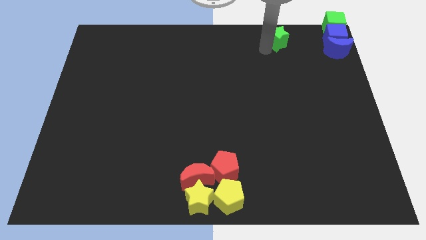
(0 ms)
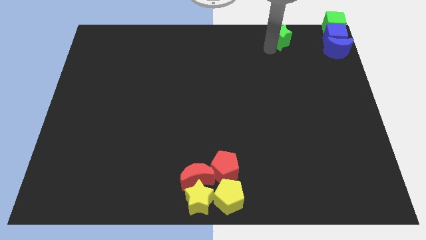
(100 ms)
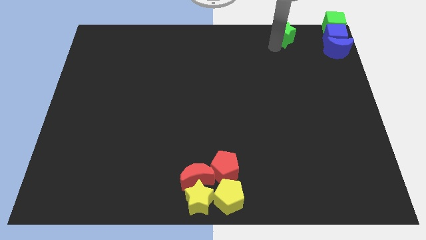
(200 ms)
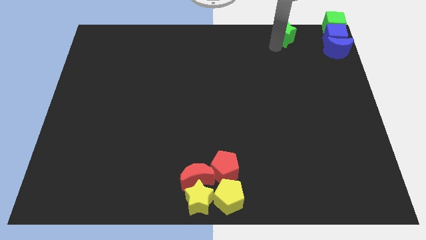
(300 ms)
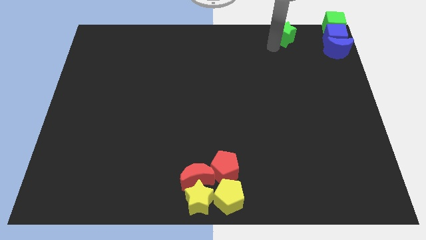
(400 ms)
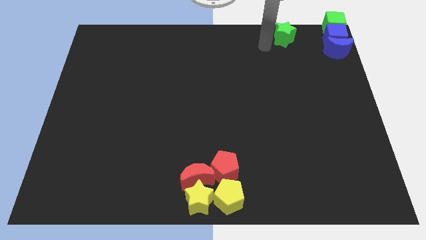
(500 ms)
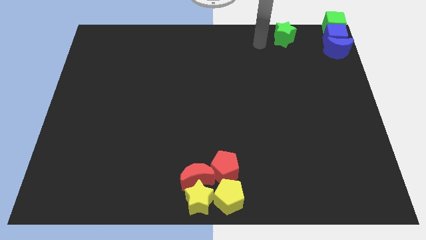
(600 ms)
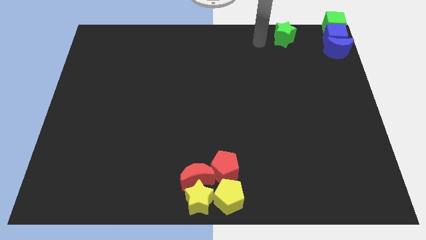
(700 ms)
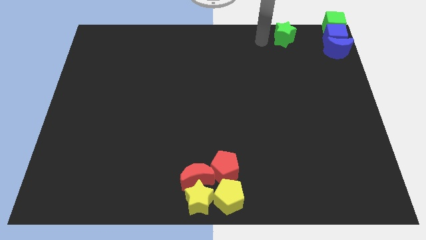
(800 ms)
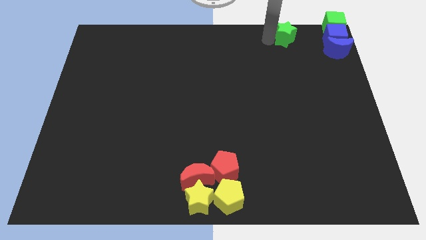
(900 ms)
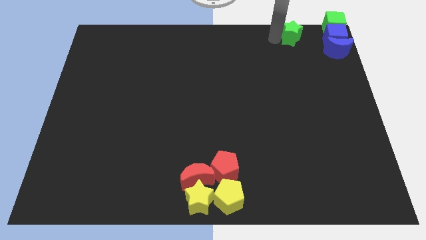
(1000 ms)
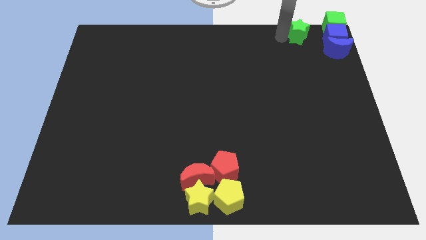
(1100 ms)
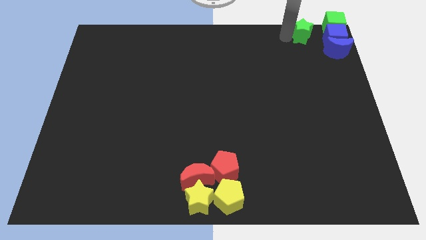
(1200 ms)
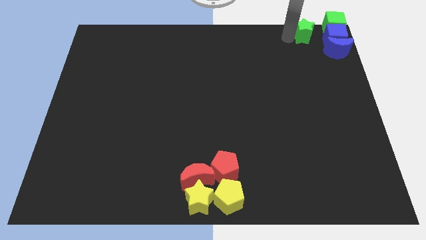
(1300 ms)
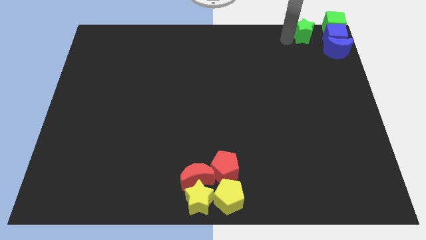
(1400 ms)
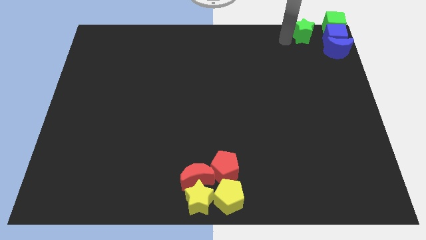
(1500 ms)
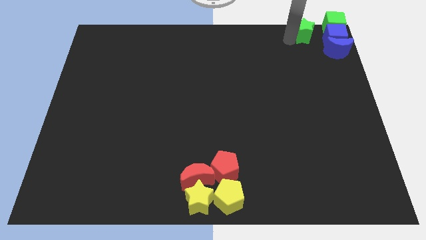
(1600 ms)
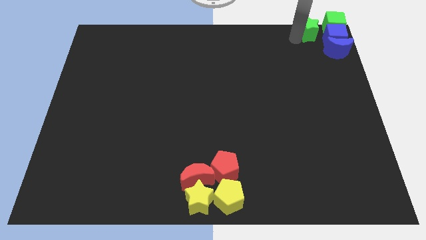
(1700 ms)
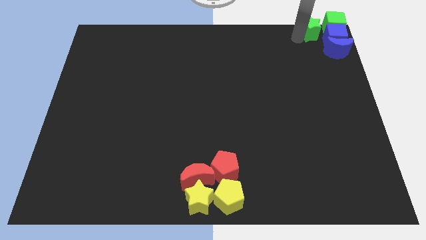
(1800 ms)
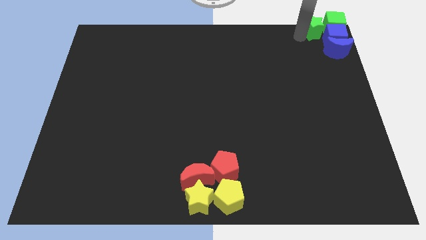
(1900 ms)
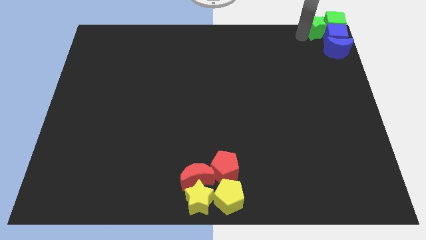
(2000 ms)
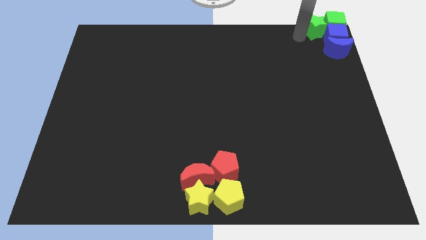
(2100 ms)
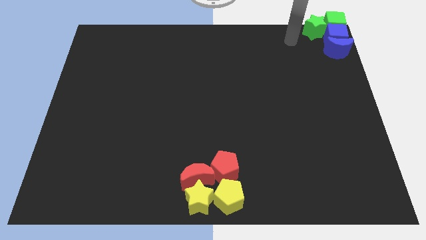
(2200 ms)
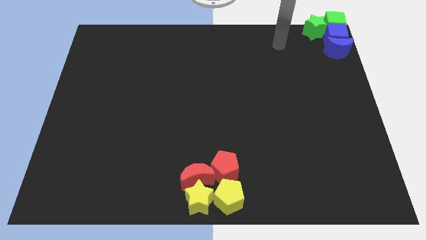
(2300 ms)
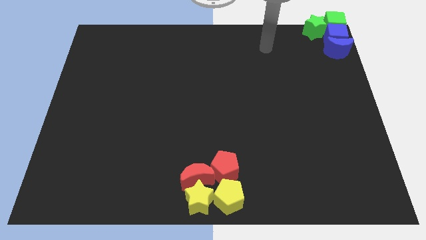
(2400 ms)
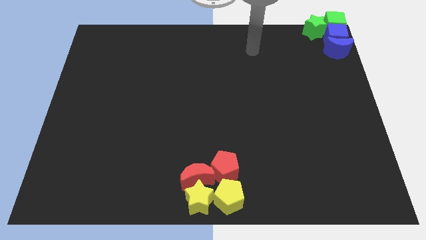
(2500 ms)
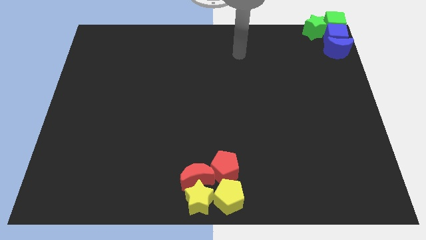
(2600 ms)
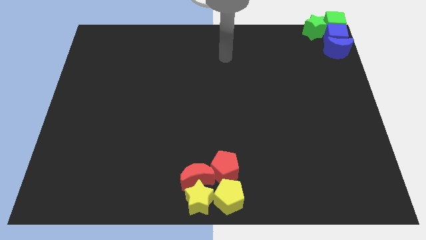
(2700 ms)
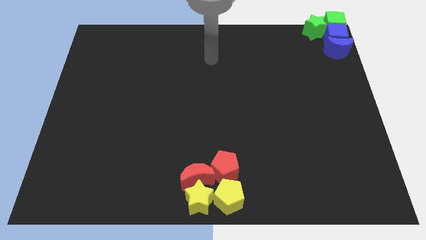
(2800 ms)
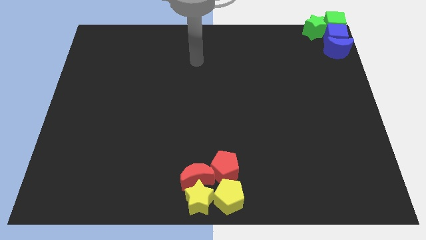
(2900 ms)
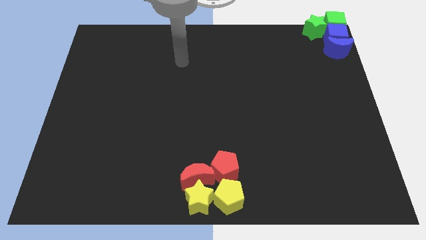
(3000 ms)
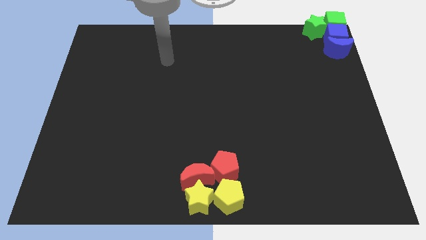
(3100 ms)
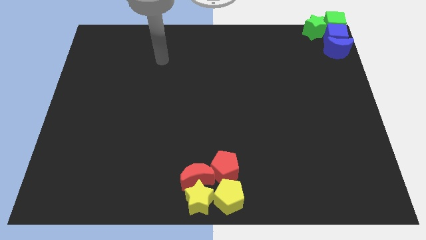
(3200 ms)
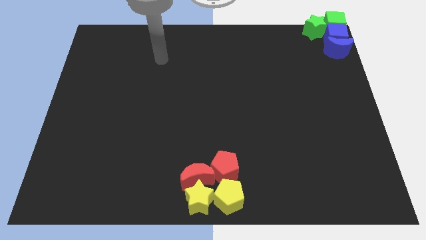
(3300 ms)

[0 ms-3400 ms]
move the green star towards a group of blocks at top corner of the board

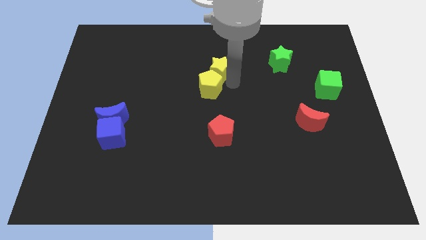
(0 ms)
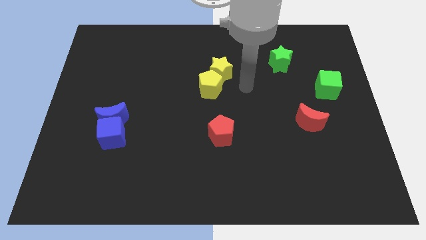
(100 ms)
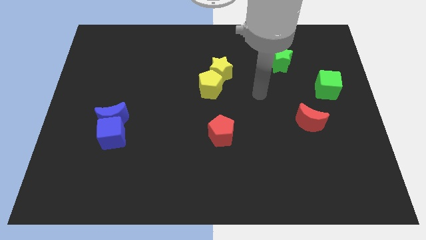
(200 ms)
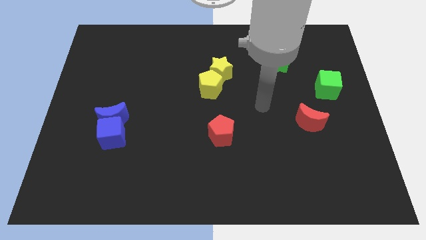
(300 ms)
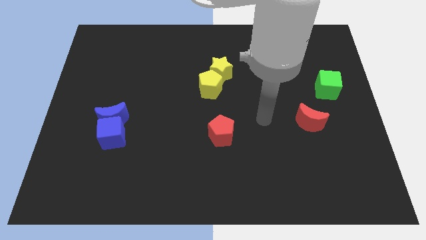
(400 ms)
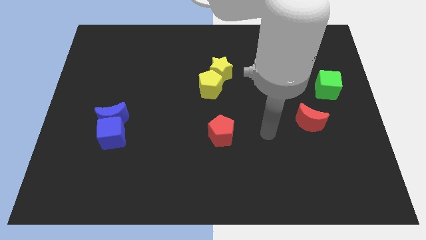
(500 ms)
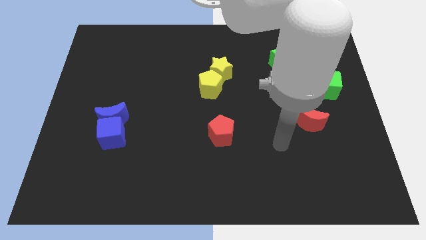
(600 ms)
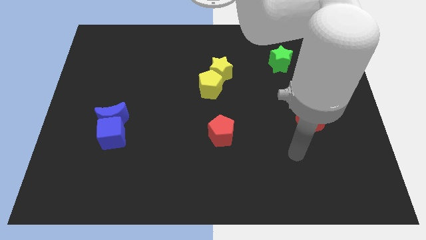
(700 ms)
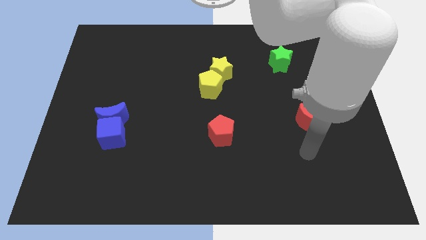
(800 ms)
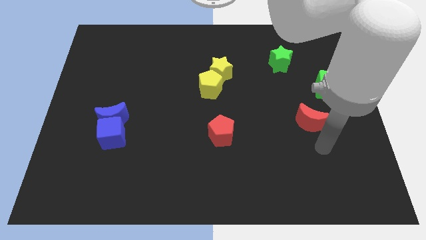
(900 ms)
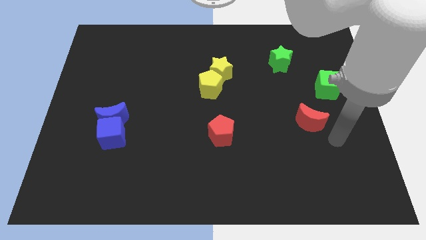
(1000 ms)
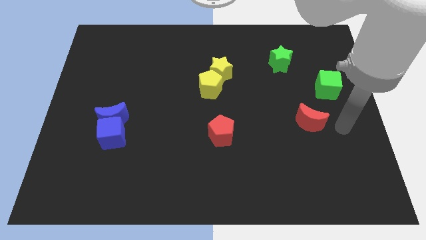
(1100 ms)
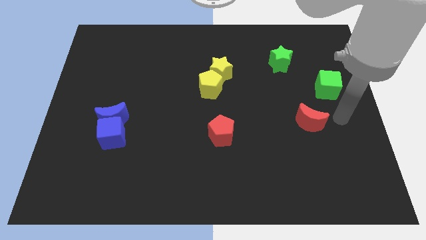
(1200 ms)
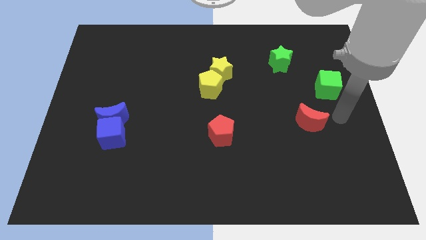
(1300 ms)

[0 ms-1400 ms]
point your arm at the right side of the red crescent

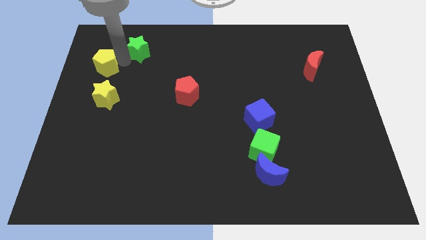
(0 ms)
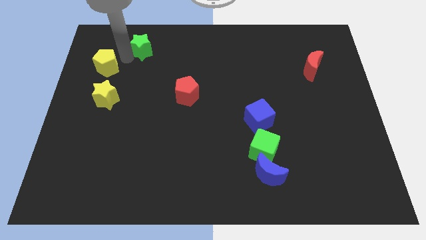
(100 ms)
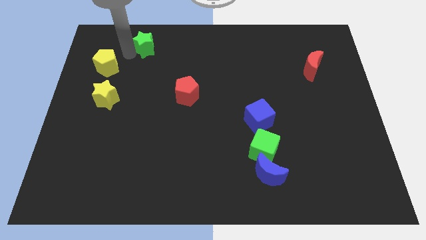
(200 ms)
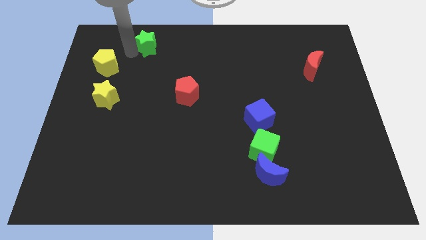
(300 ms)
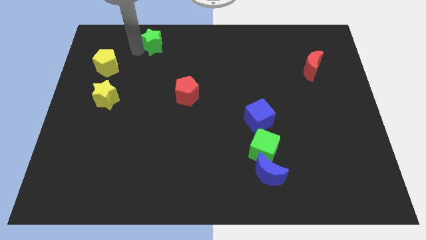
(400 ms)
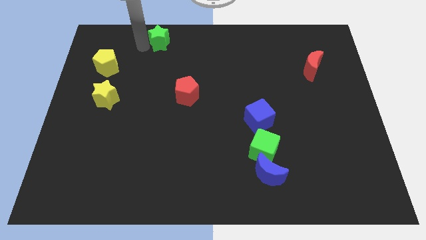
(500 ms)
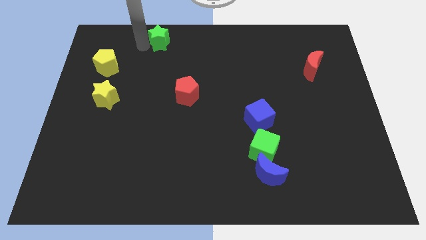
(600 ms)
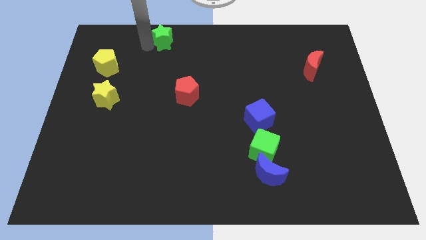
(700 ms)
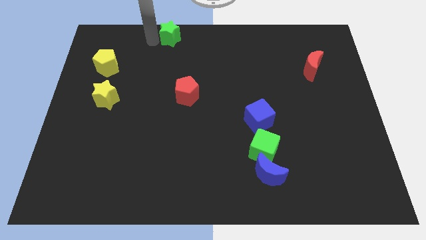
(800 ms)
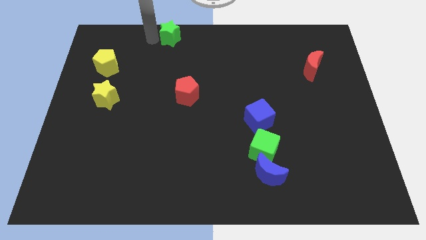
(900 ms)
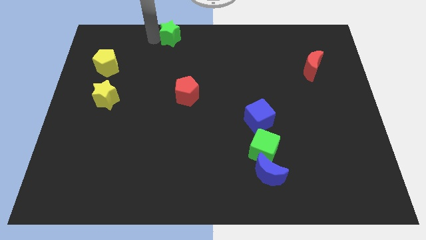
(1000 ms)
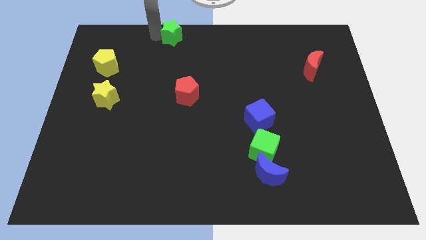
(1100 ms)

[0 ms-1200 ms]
move the green star to the top center

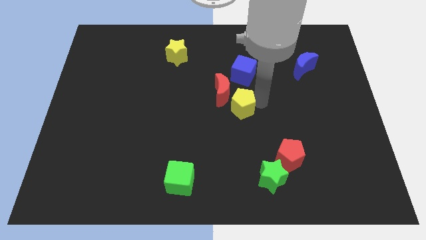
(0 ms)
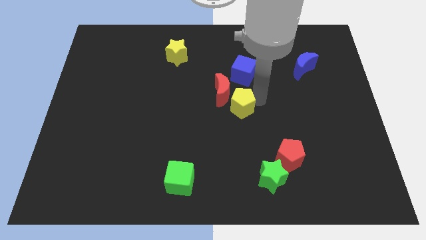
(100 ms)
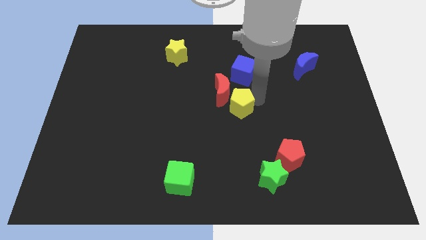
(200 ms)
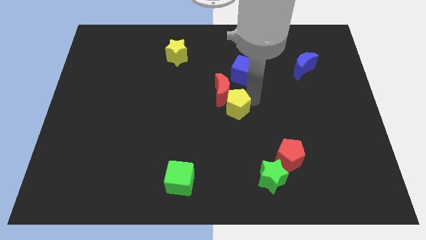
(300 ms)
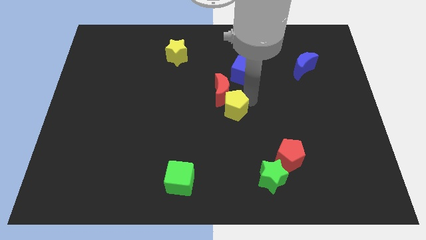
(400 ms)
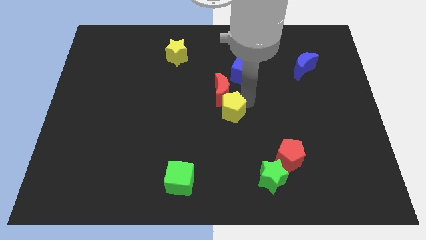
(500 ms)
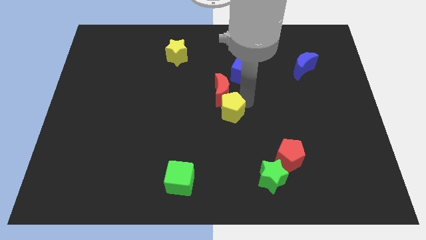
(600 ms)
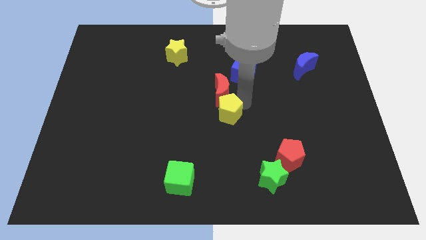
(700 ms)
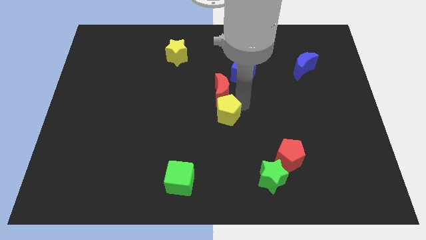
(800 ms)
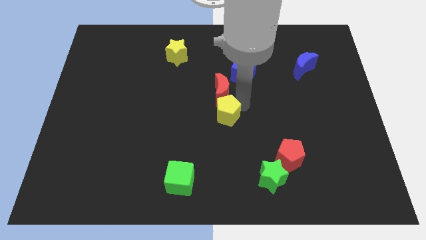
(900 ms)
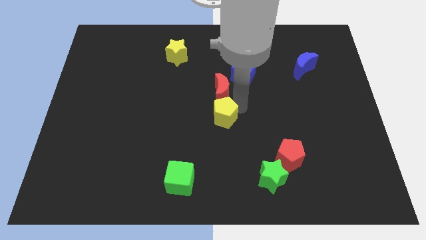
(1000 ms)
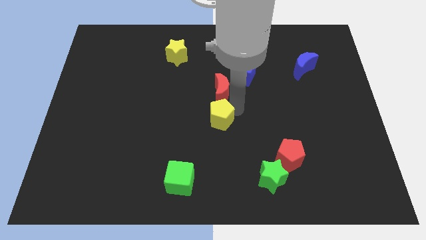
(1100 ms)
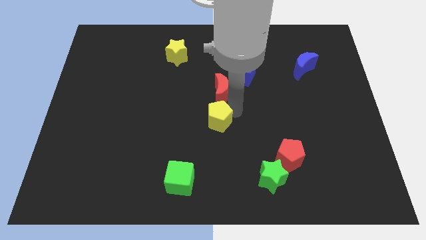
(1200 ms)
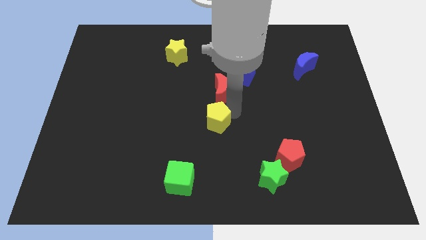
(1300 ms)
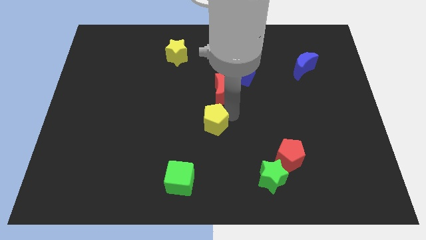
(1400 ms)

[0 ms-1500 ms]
place the yellow pentagon at the bottom of red moon

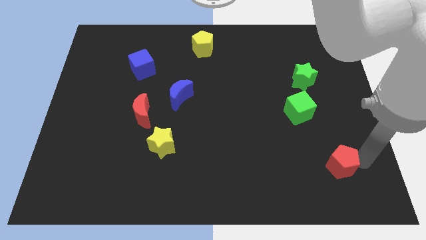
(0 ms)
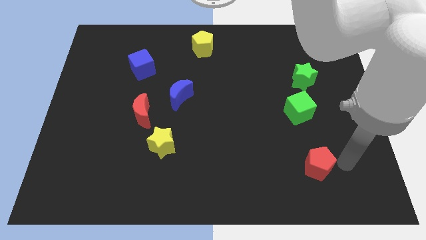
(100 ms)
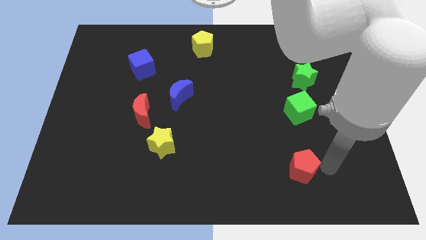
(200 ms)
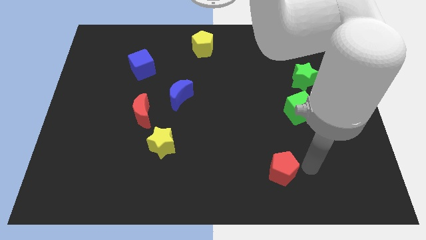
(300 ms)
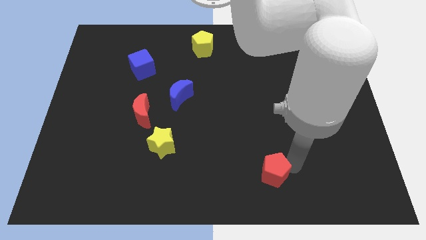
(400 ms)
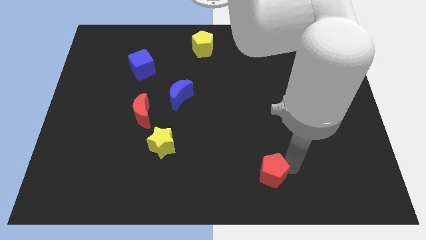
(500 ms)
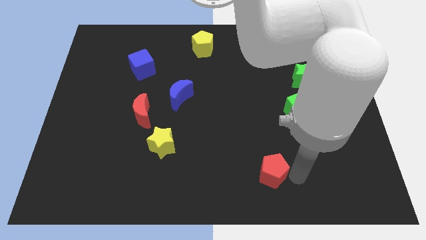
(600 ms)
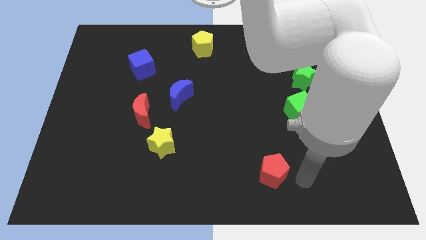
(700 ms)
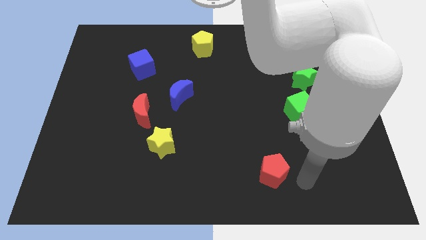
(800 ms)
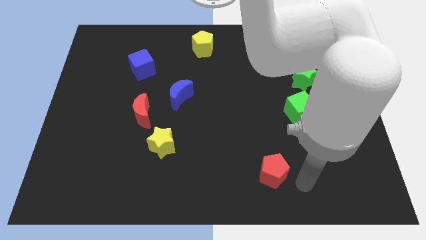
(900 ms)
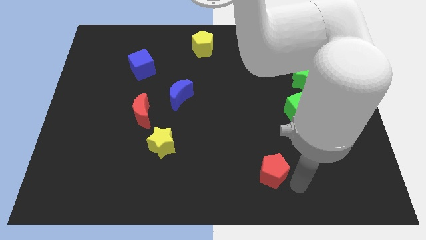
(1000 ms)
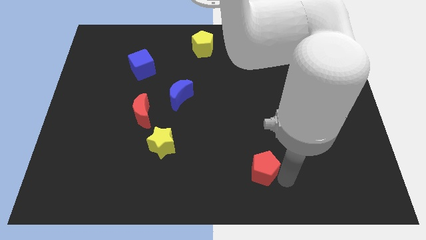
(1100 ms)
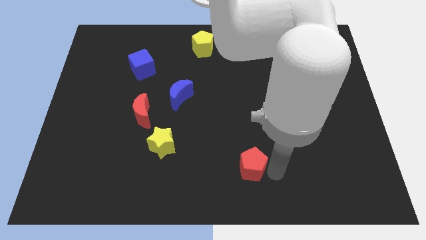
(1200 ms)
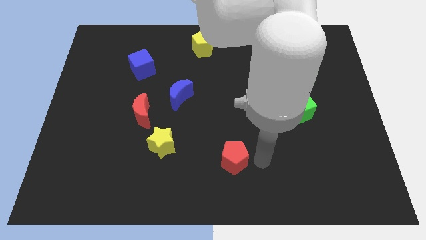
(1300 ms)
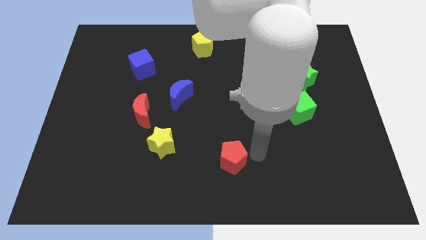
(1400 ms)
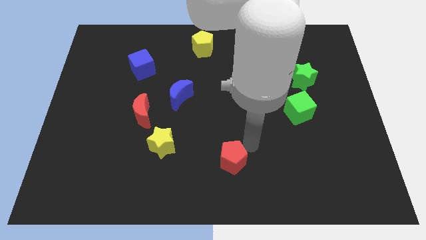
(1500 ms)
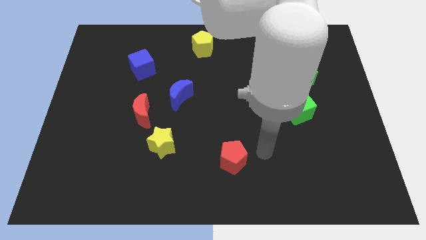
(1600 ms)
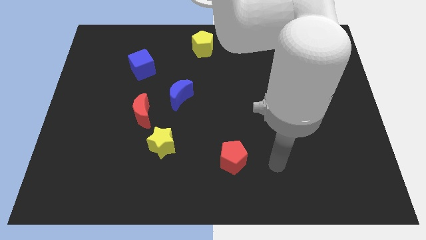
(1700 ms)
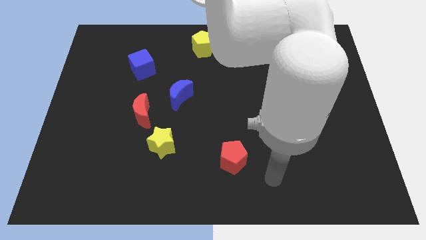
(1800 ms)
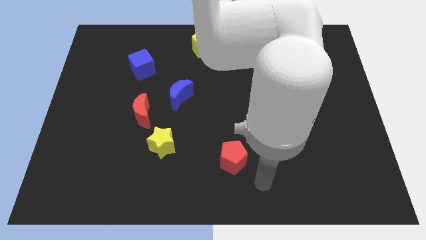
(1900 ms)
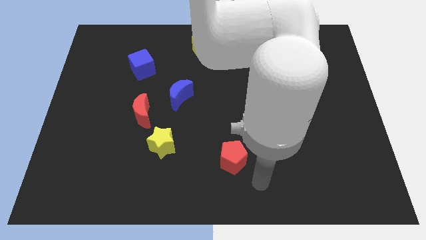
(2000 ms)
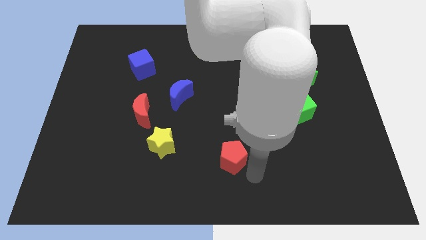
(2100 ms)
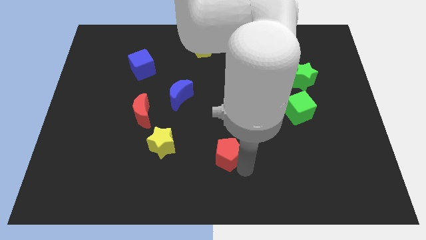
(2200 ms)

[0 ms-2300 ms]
push the red pentagon slightly towards the center of the board
